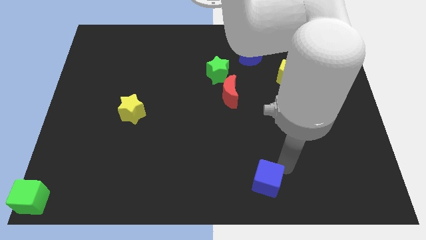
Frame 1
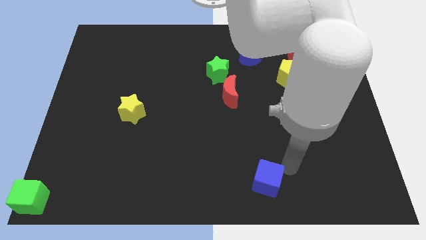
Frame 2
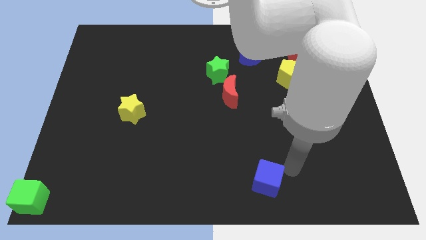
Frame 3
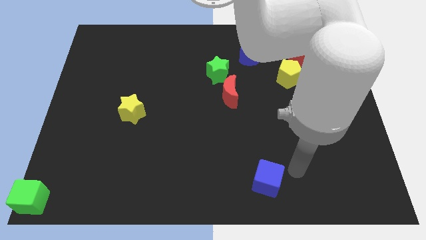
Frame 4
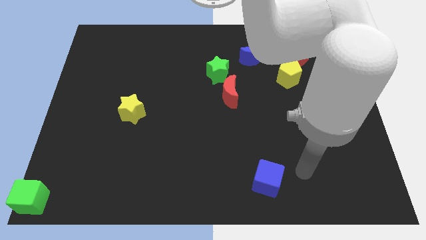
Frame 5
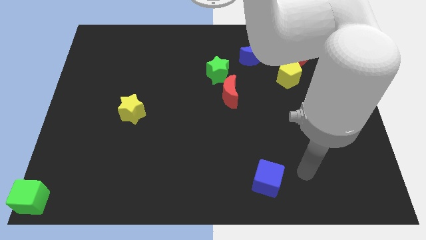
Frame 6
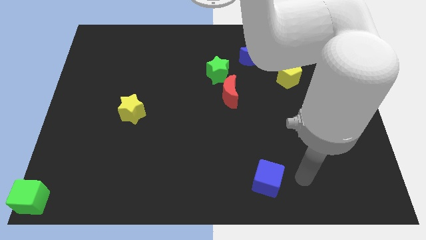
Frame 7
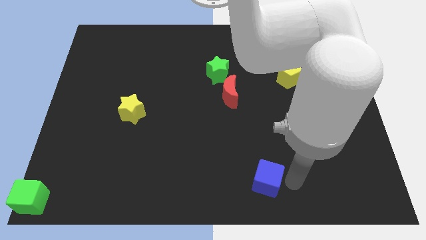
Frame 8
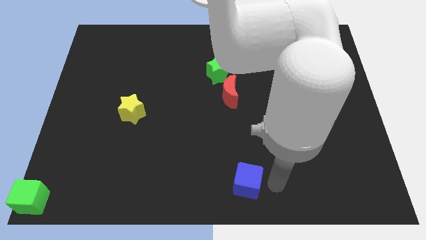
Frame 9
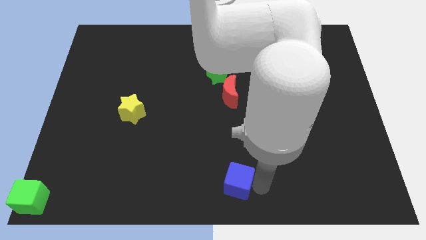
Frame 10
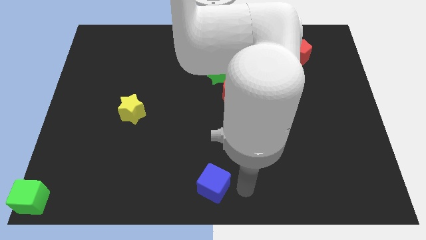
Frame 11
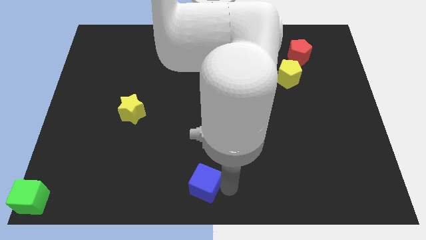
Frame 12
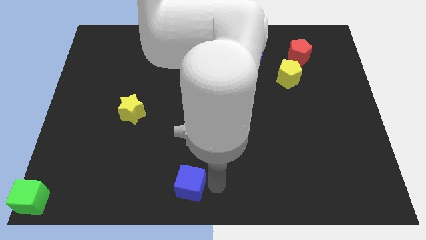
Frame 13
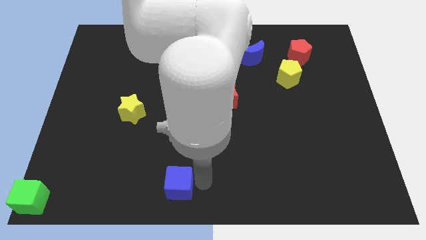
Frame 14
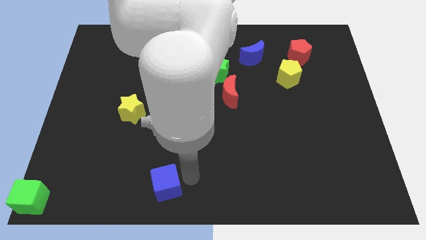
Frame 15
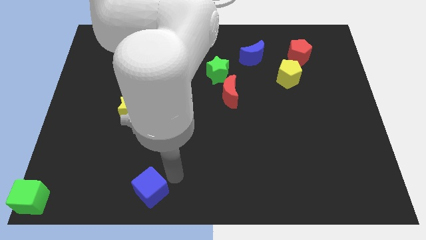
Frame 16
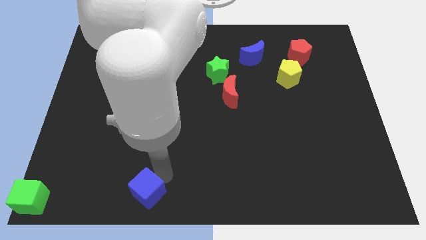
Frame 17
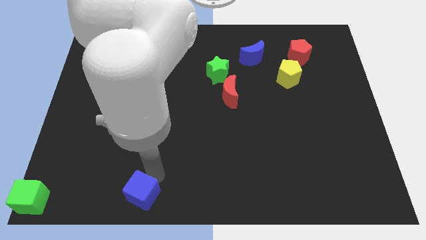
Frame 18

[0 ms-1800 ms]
move the blue cube to the left of the board

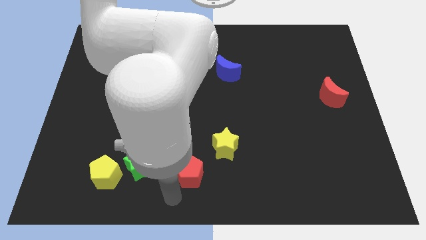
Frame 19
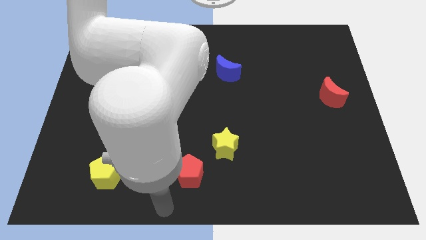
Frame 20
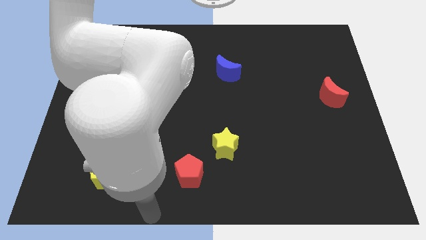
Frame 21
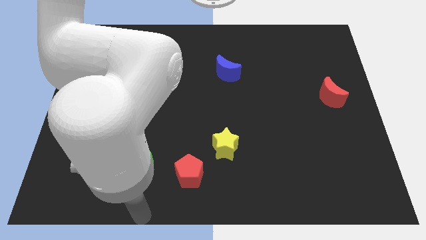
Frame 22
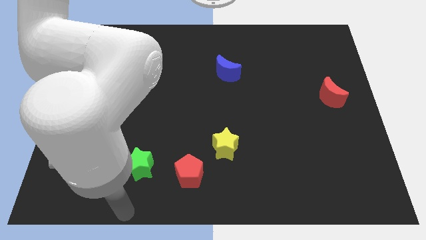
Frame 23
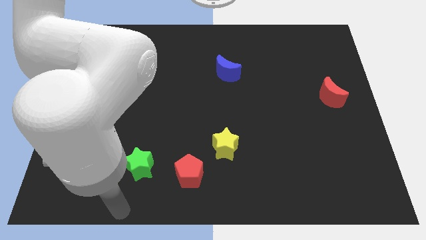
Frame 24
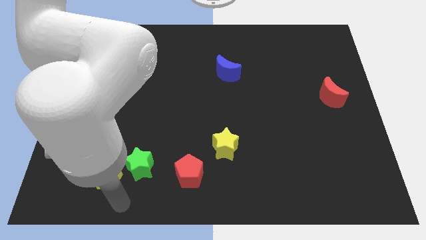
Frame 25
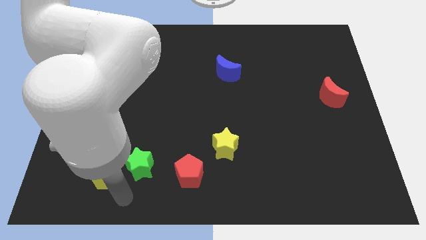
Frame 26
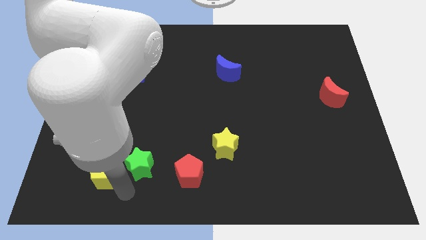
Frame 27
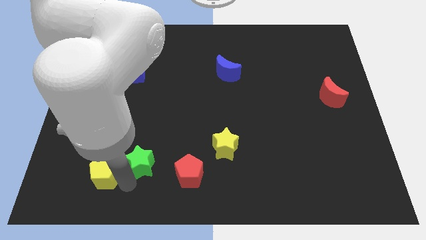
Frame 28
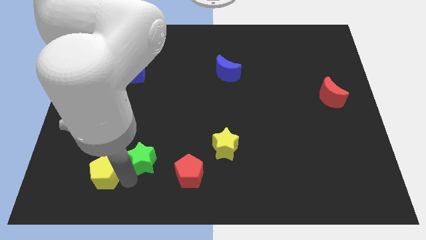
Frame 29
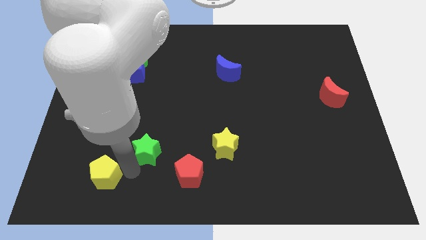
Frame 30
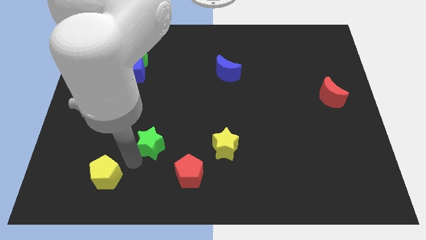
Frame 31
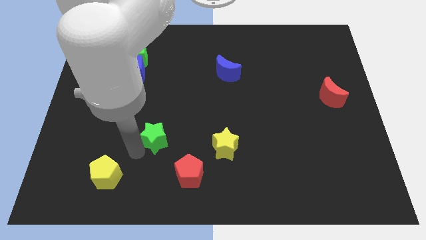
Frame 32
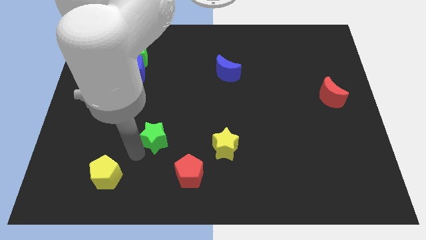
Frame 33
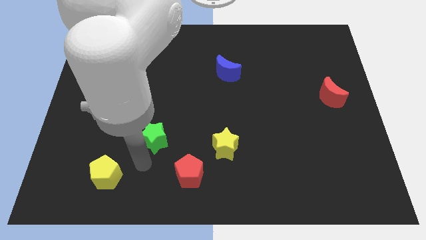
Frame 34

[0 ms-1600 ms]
push the green star up slightly

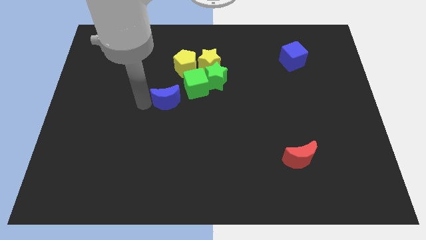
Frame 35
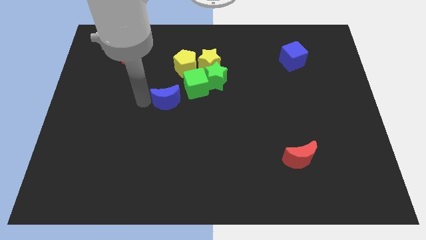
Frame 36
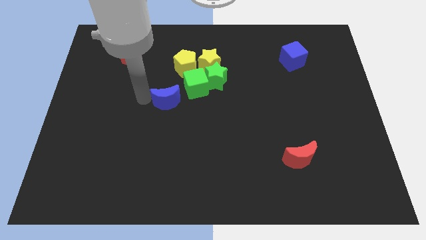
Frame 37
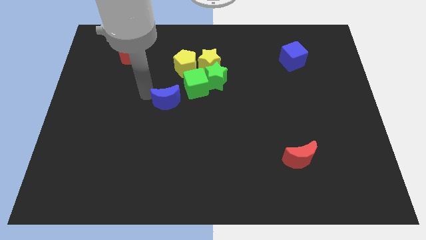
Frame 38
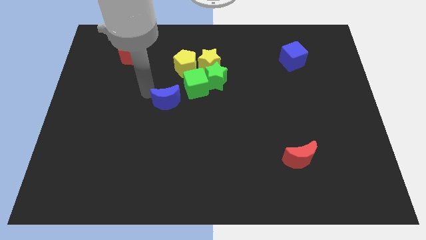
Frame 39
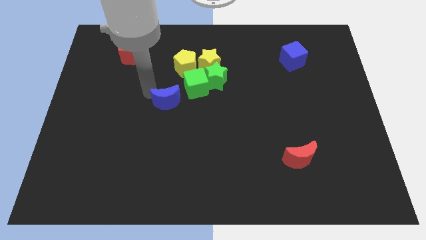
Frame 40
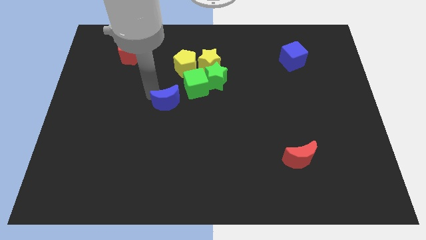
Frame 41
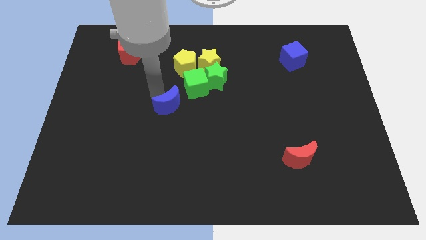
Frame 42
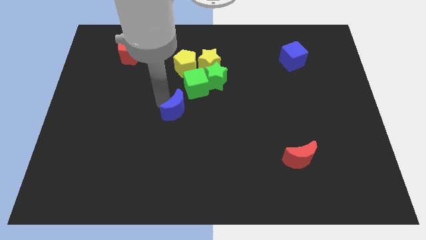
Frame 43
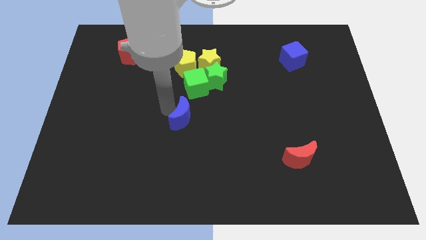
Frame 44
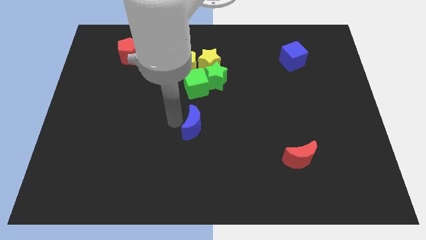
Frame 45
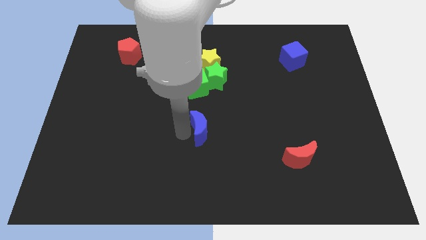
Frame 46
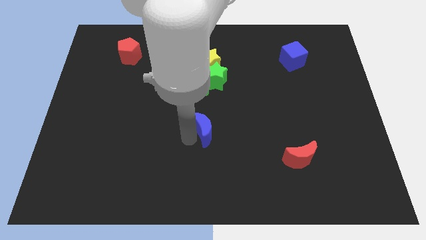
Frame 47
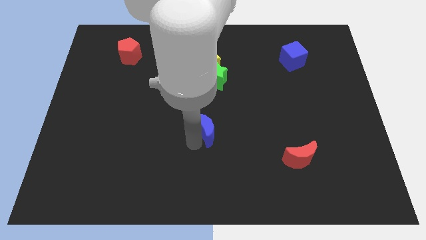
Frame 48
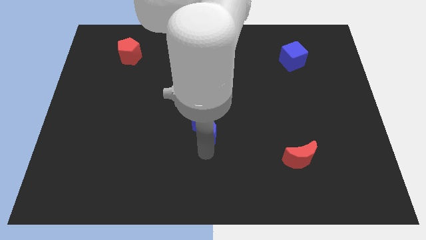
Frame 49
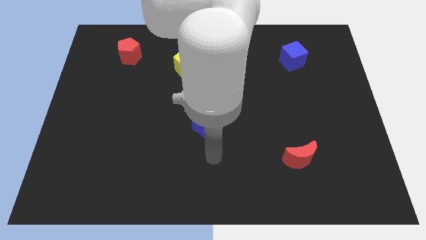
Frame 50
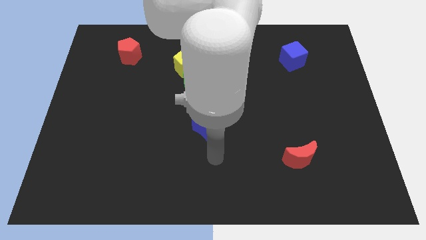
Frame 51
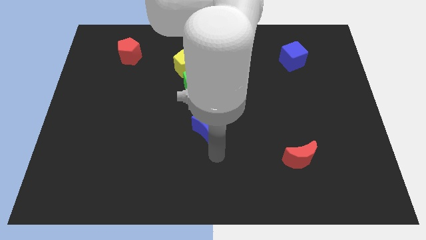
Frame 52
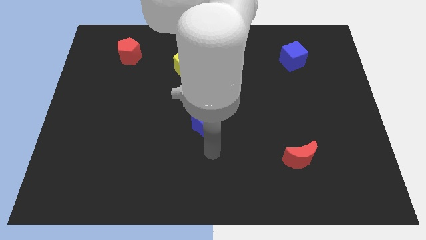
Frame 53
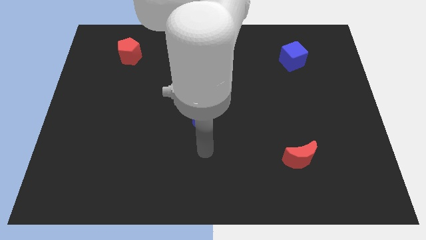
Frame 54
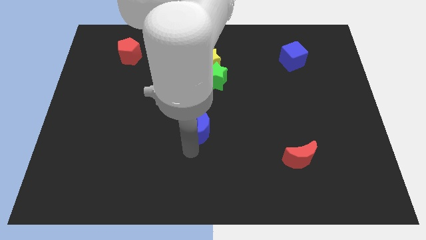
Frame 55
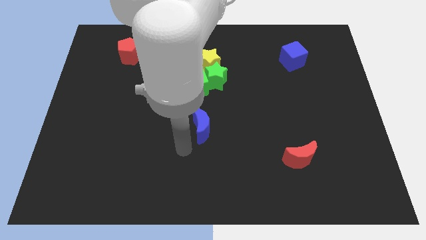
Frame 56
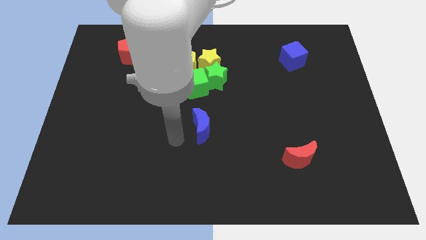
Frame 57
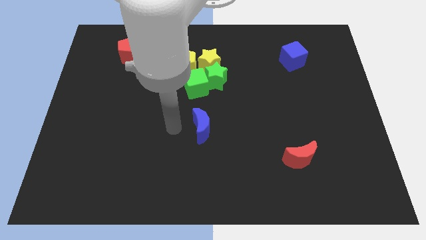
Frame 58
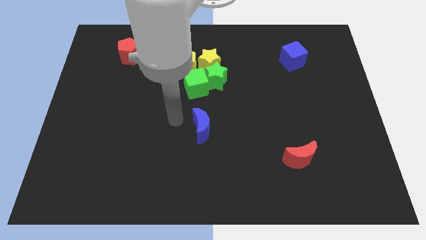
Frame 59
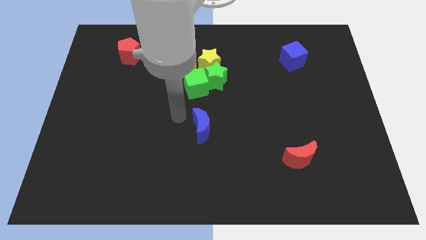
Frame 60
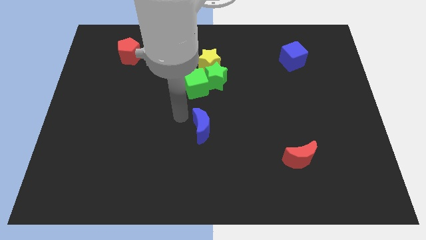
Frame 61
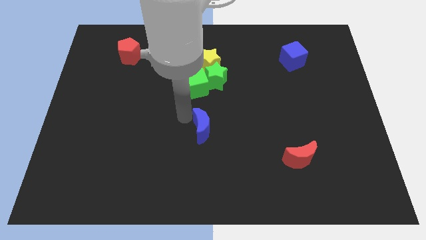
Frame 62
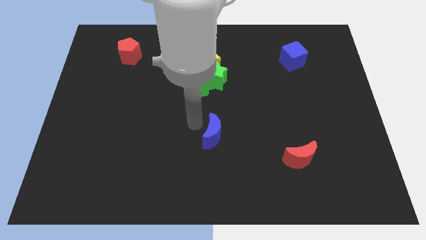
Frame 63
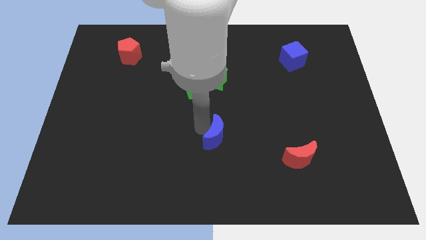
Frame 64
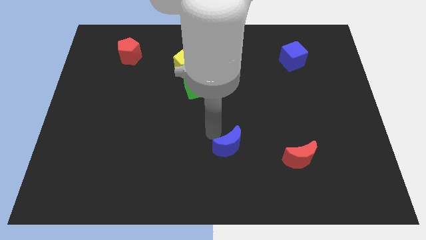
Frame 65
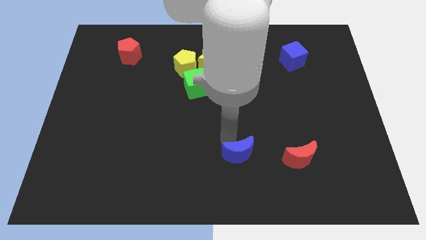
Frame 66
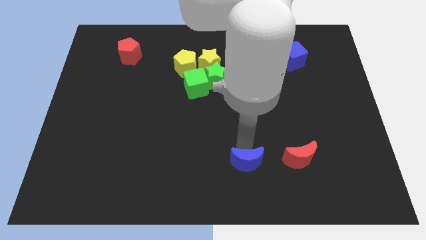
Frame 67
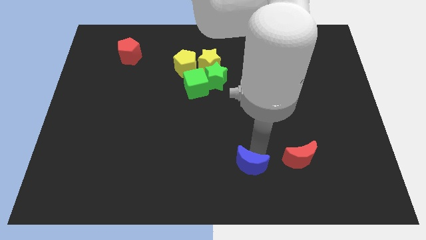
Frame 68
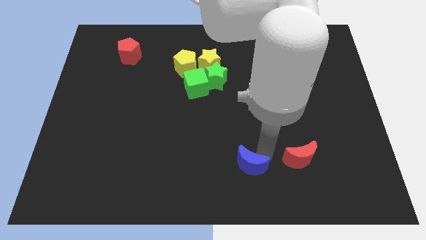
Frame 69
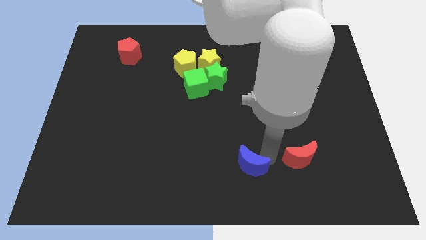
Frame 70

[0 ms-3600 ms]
move the blue crescent to the left side of the red crescent

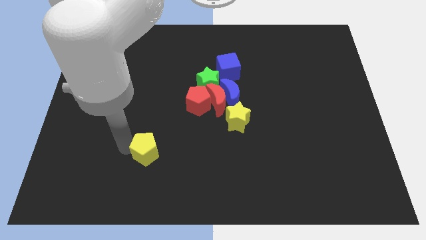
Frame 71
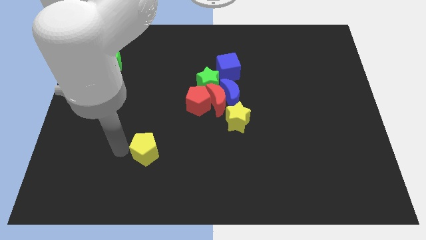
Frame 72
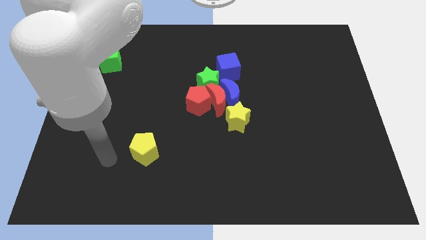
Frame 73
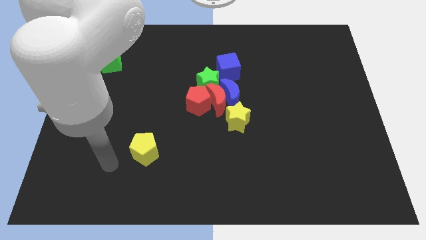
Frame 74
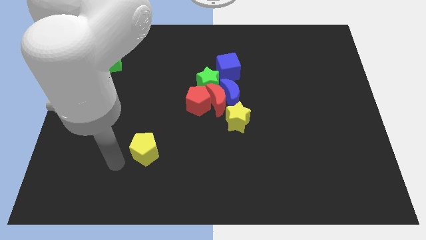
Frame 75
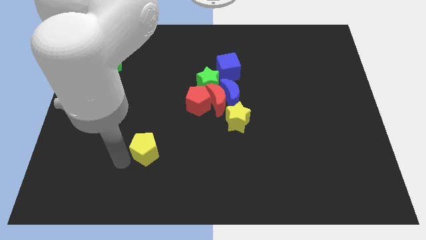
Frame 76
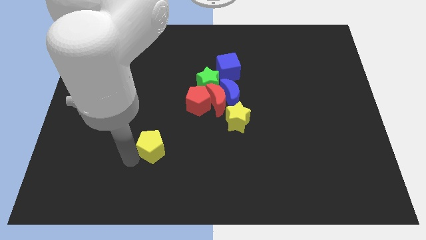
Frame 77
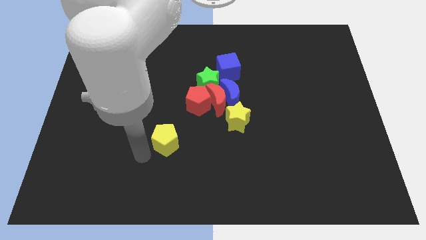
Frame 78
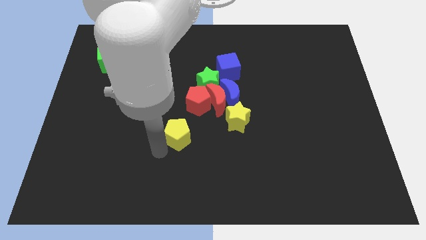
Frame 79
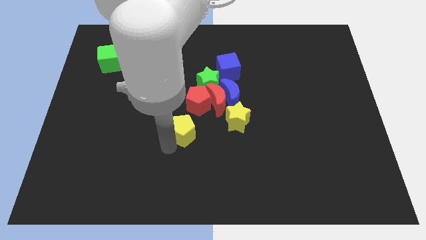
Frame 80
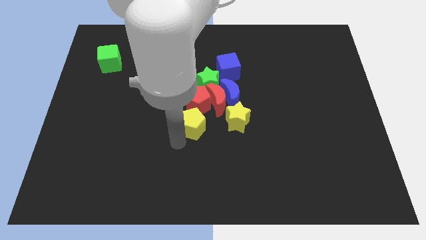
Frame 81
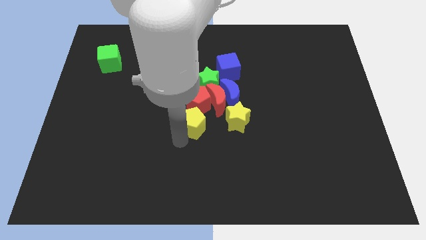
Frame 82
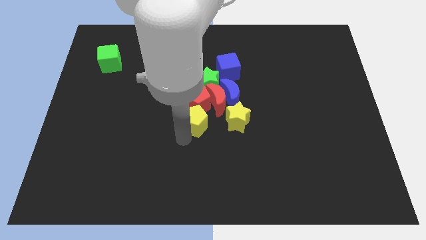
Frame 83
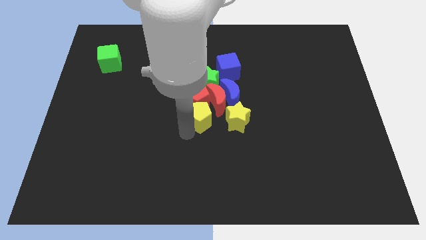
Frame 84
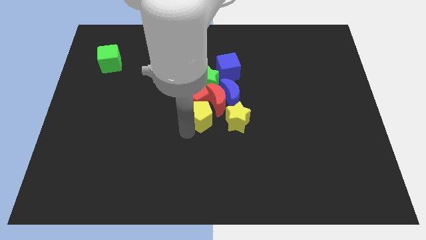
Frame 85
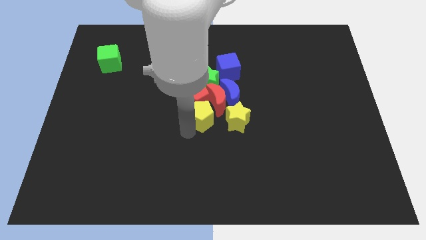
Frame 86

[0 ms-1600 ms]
place the yellow pentagon below the red pentagon

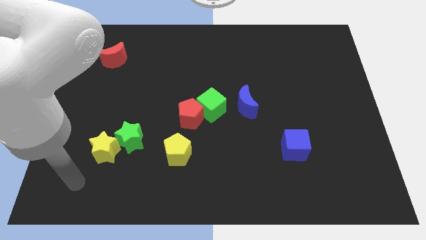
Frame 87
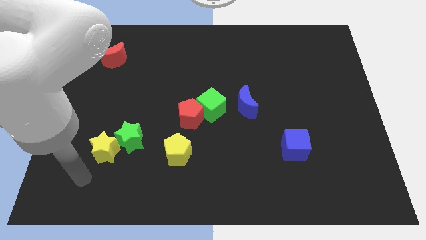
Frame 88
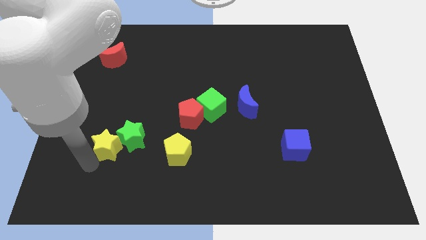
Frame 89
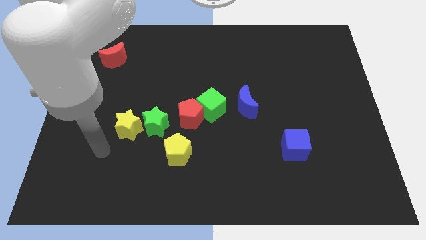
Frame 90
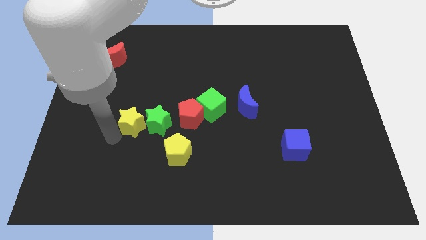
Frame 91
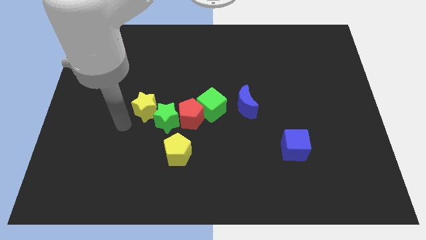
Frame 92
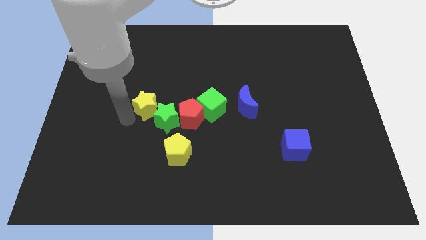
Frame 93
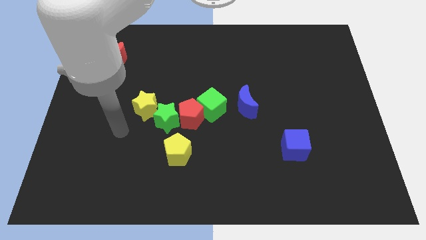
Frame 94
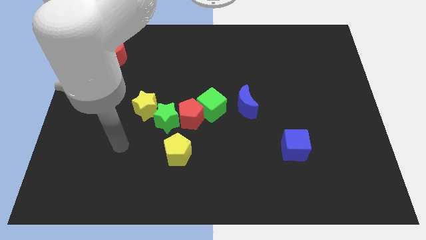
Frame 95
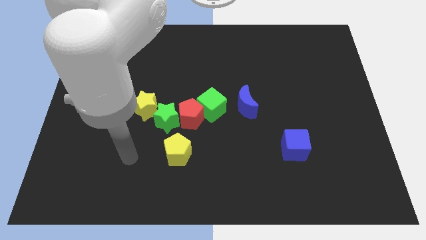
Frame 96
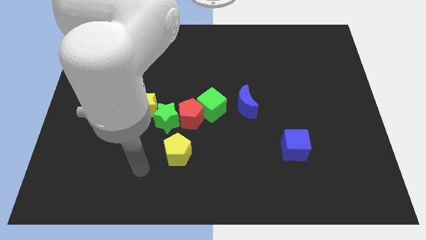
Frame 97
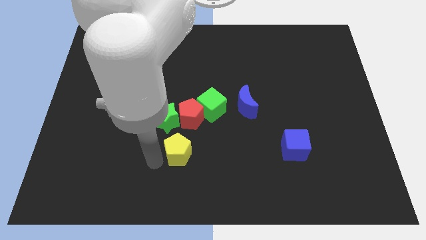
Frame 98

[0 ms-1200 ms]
push the green star with a yellow star to the right of the red pentagon
